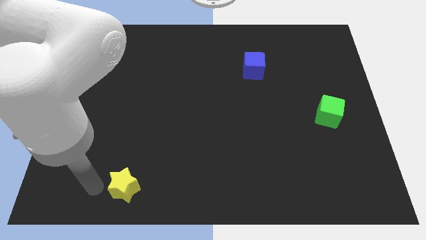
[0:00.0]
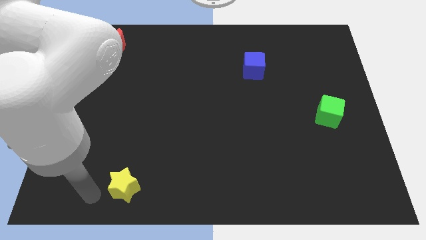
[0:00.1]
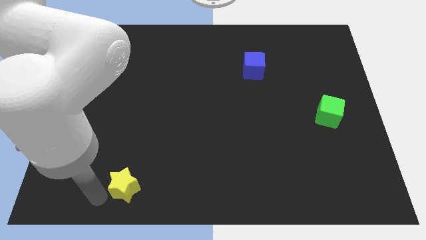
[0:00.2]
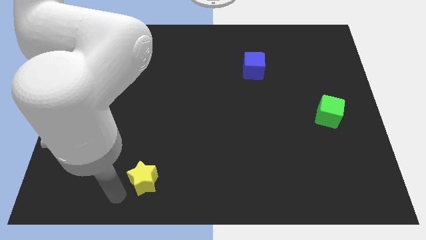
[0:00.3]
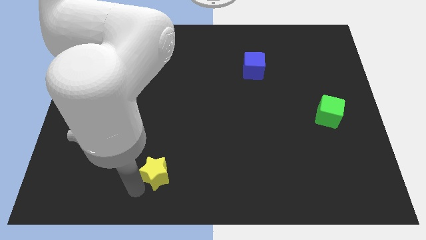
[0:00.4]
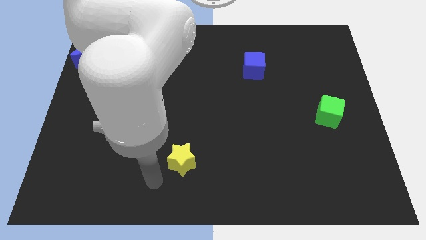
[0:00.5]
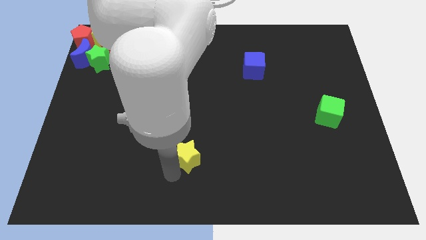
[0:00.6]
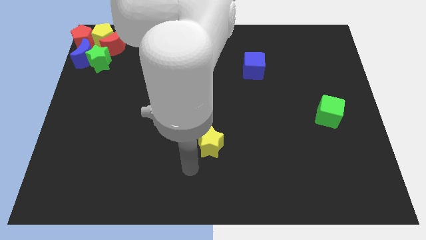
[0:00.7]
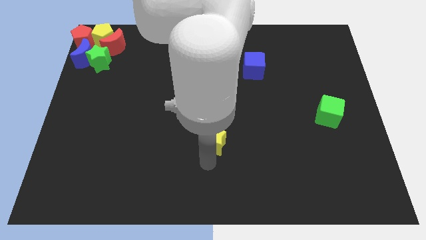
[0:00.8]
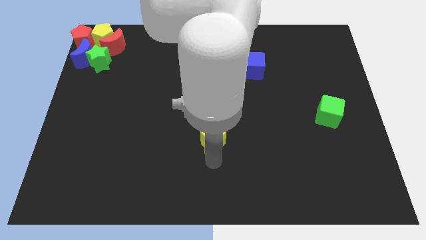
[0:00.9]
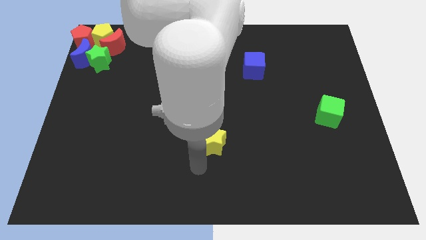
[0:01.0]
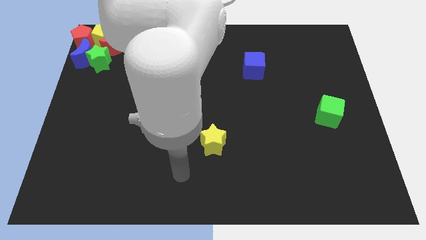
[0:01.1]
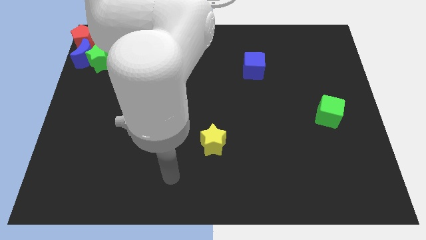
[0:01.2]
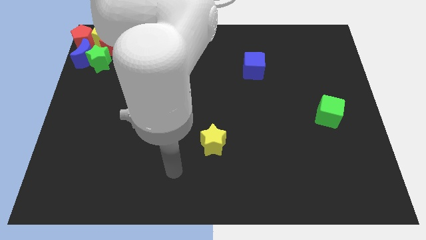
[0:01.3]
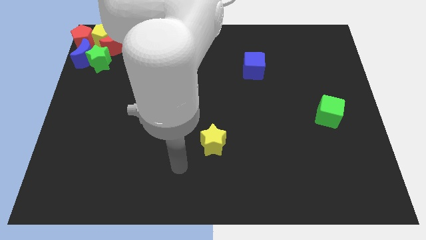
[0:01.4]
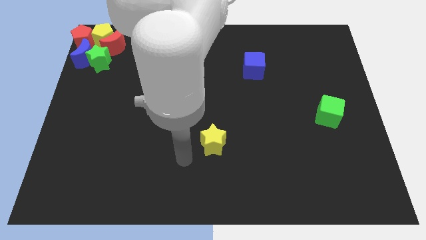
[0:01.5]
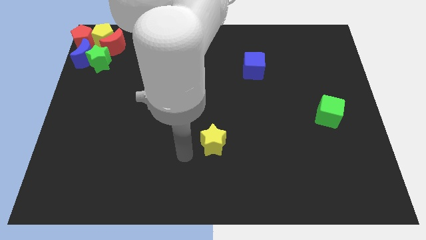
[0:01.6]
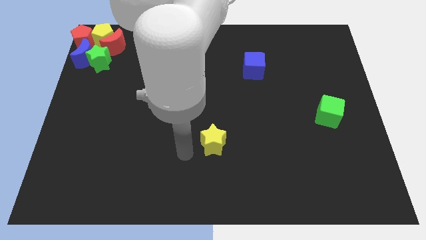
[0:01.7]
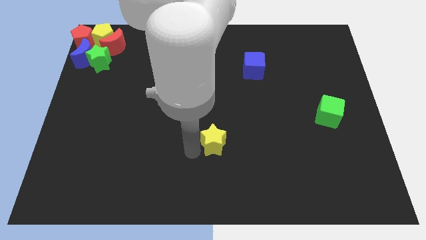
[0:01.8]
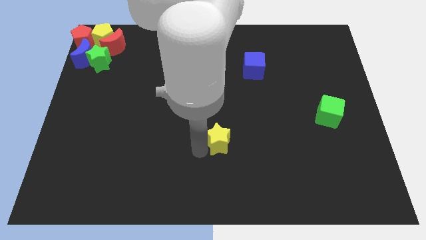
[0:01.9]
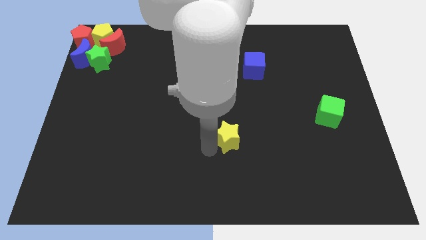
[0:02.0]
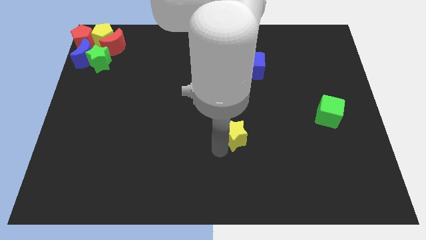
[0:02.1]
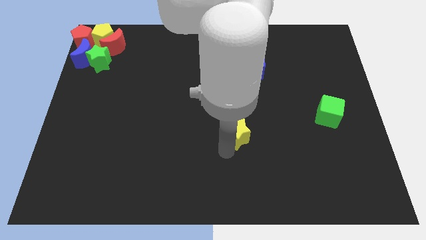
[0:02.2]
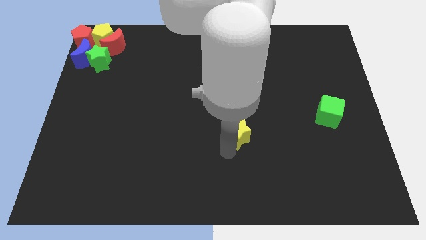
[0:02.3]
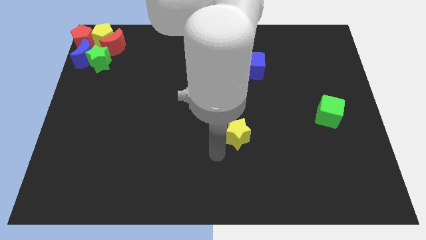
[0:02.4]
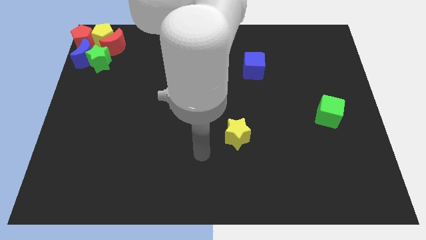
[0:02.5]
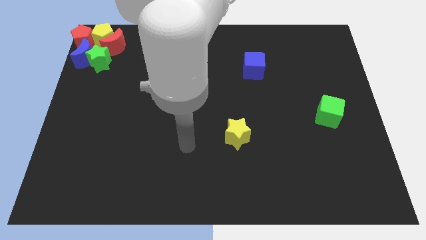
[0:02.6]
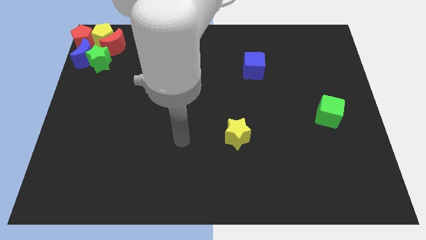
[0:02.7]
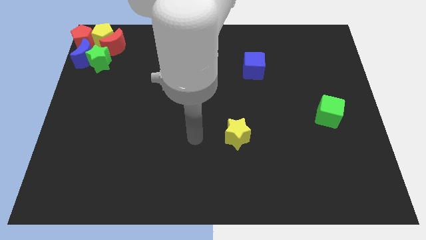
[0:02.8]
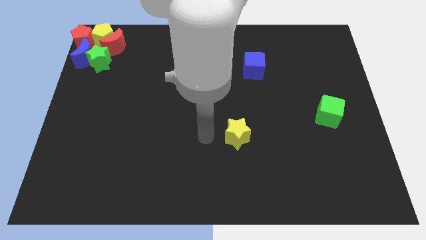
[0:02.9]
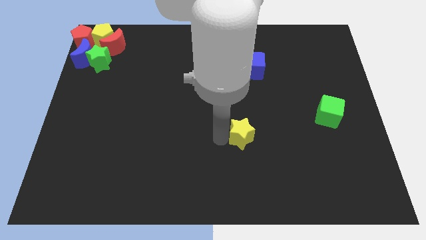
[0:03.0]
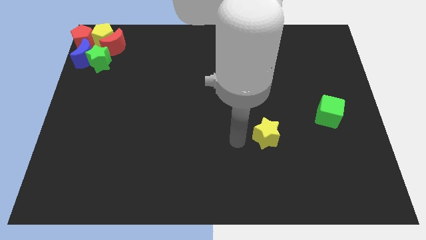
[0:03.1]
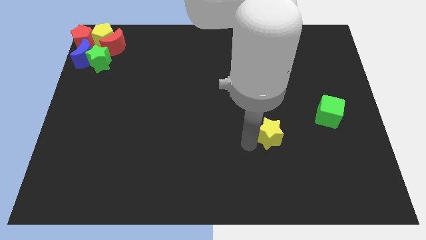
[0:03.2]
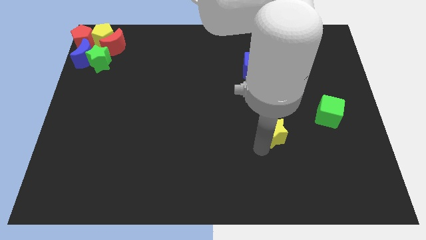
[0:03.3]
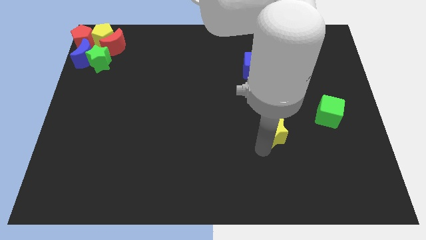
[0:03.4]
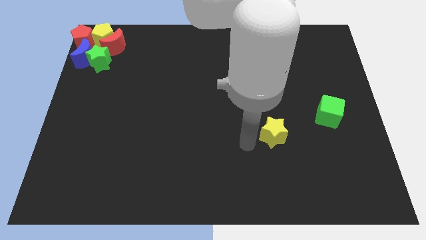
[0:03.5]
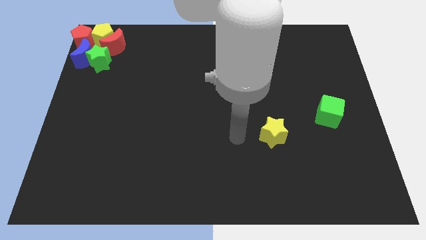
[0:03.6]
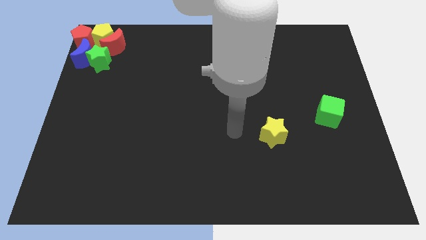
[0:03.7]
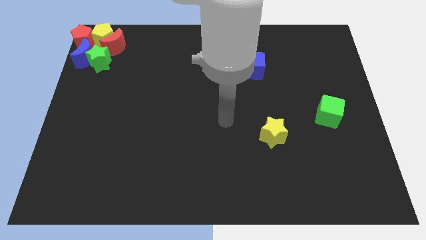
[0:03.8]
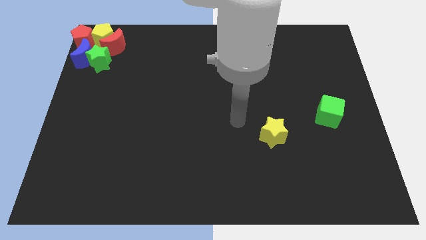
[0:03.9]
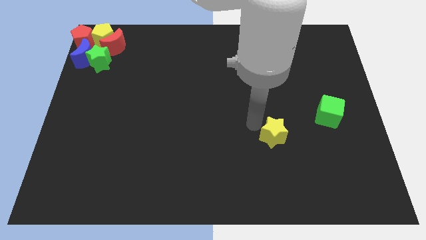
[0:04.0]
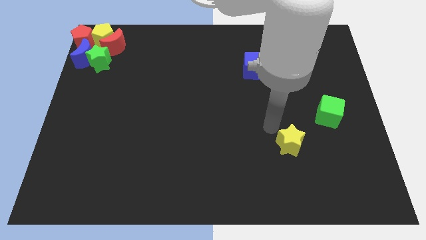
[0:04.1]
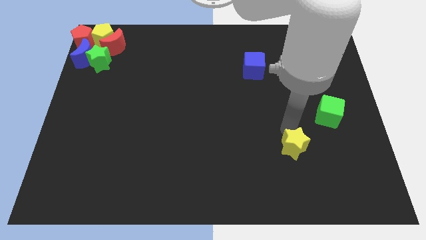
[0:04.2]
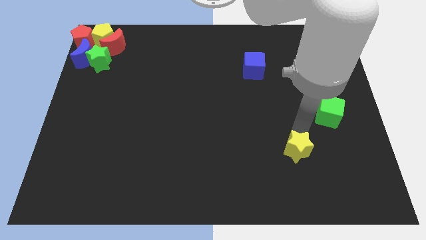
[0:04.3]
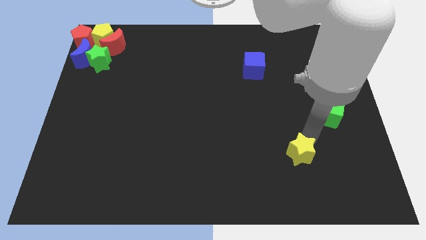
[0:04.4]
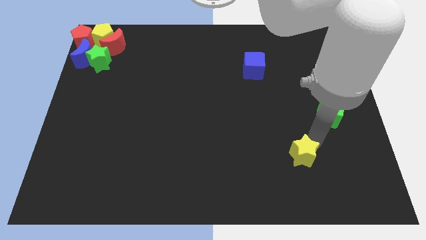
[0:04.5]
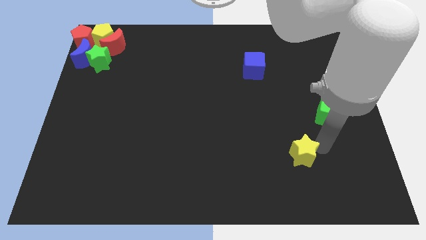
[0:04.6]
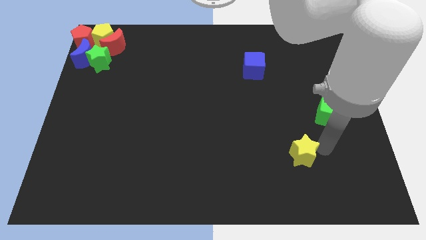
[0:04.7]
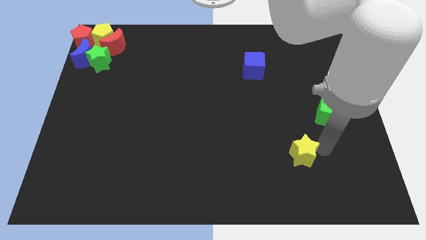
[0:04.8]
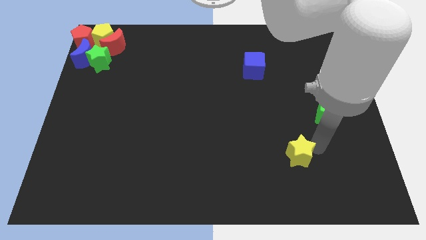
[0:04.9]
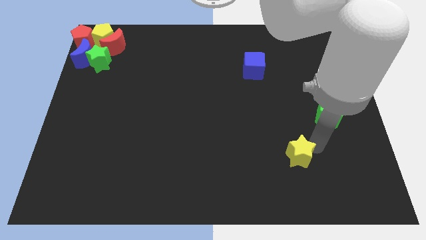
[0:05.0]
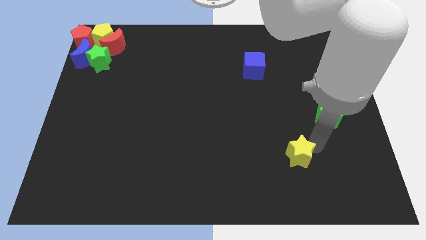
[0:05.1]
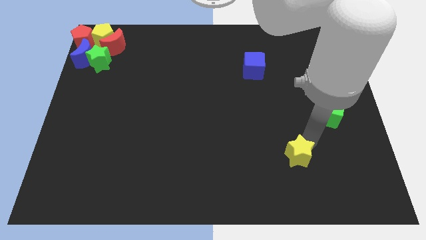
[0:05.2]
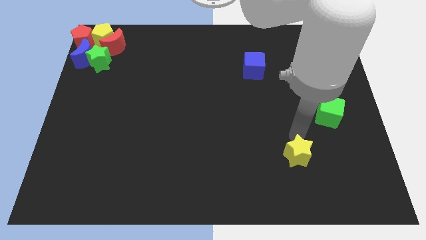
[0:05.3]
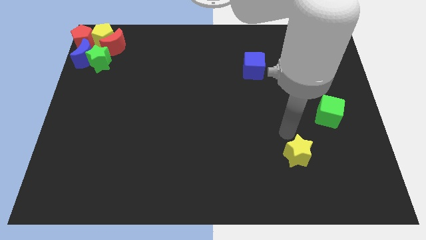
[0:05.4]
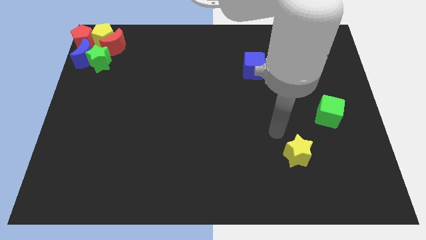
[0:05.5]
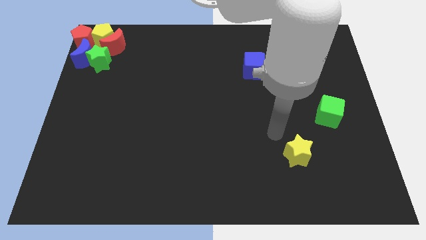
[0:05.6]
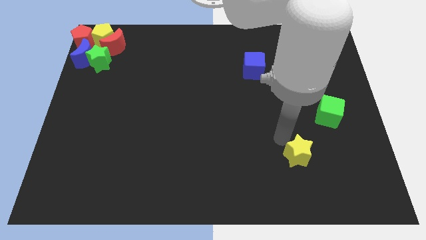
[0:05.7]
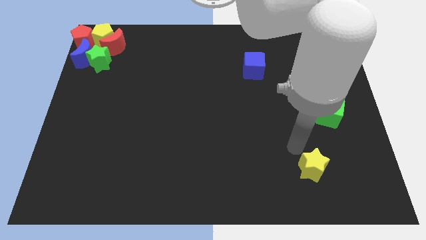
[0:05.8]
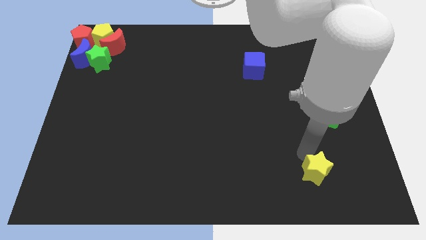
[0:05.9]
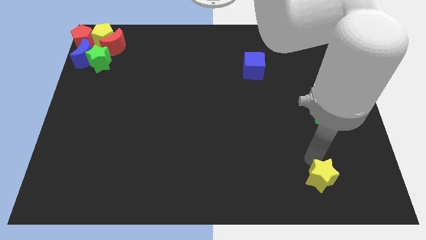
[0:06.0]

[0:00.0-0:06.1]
place the yellow star diagonally bottom right to the blue cube

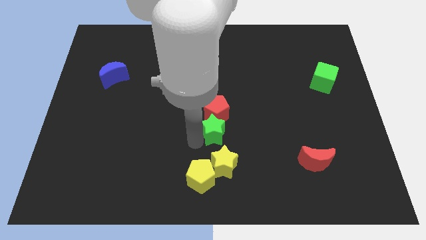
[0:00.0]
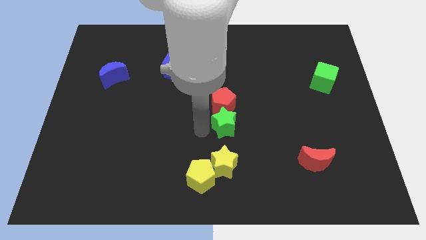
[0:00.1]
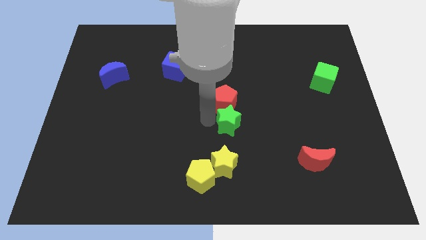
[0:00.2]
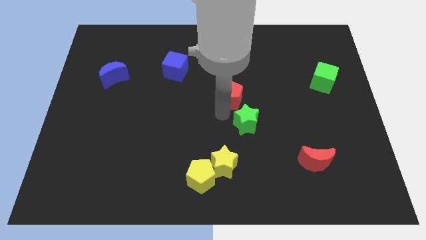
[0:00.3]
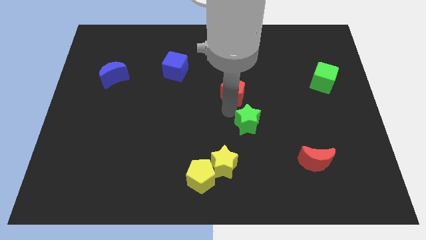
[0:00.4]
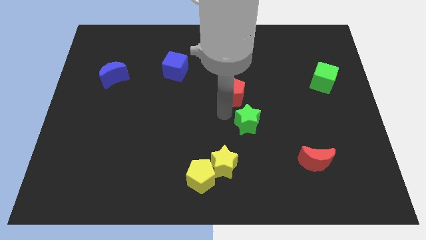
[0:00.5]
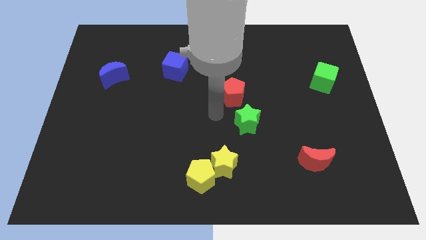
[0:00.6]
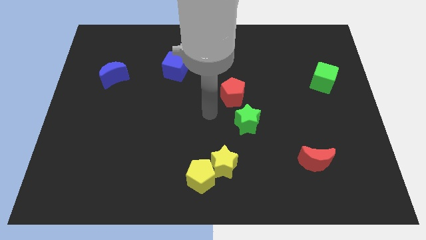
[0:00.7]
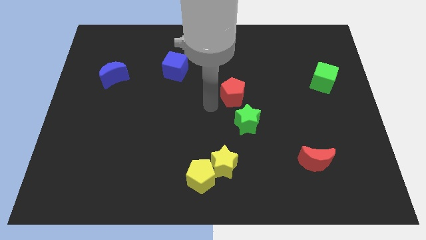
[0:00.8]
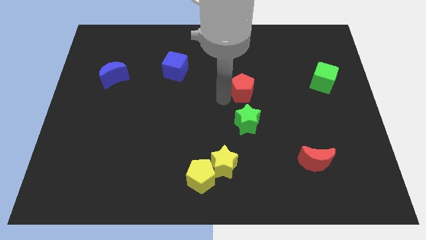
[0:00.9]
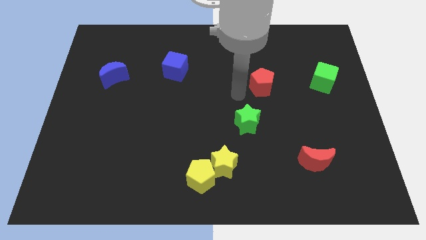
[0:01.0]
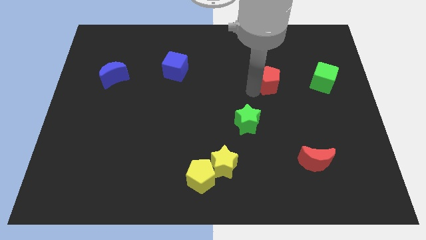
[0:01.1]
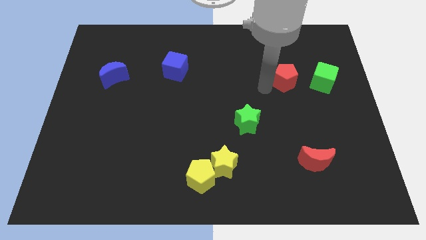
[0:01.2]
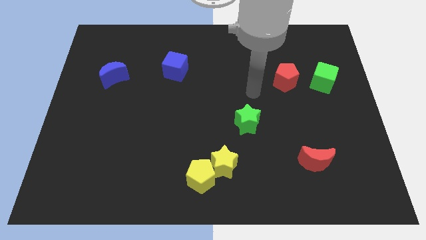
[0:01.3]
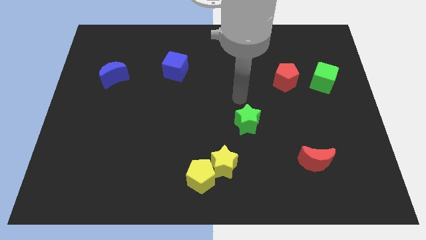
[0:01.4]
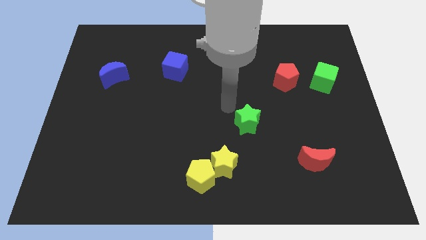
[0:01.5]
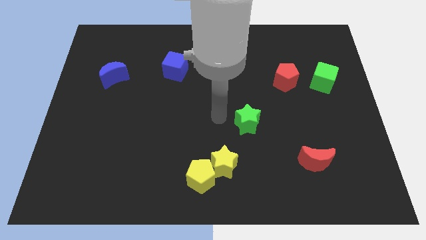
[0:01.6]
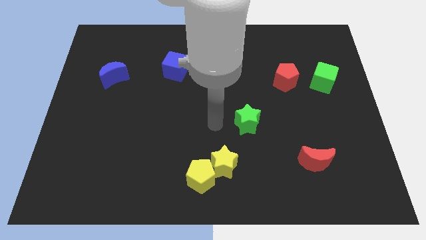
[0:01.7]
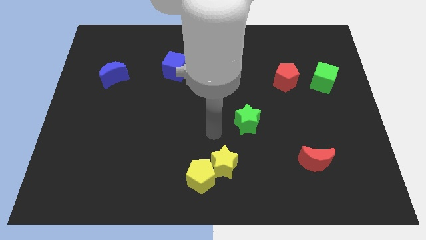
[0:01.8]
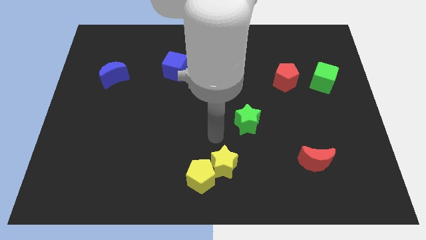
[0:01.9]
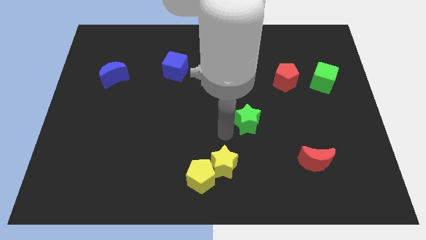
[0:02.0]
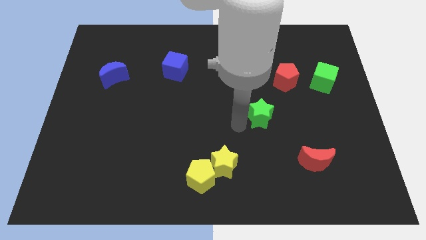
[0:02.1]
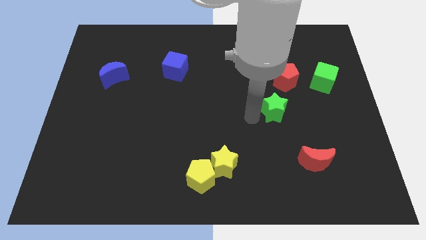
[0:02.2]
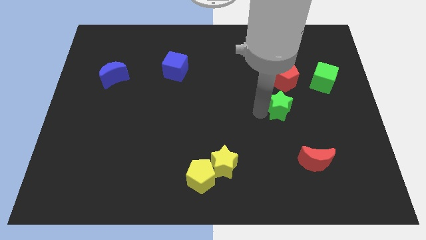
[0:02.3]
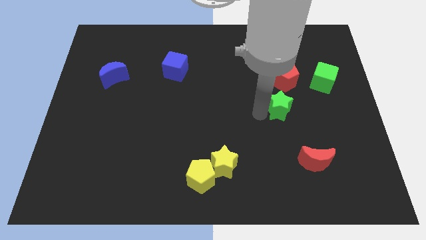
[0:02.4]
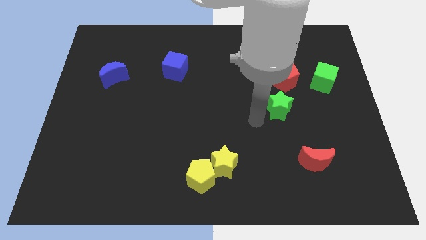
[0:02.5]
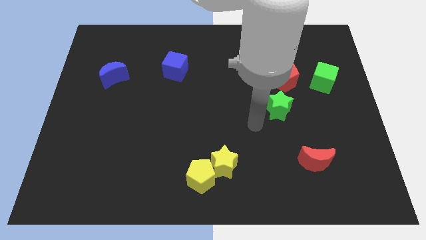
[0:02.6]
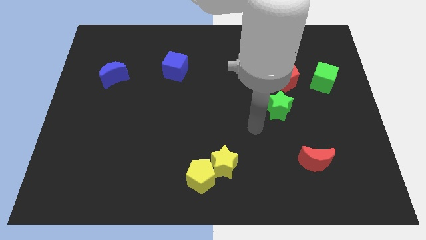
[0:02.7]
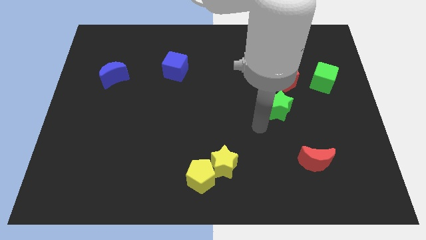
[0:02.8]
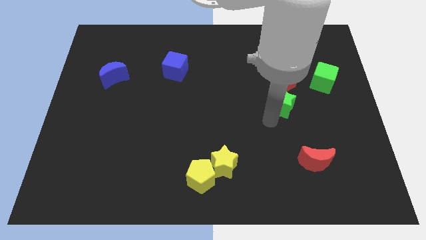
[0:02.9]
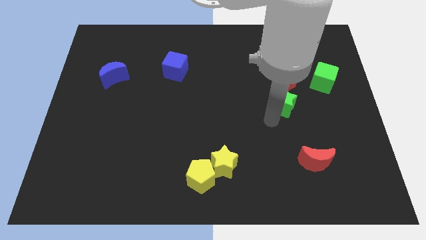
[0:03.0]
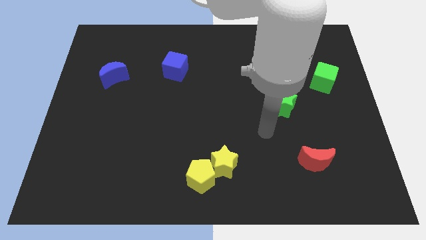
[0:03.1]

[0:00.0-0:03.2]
push the red pentagon with the green star towards the top right
